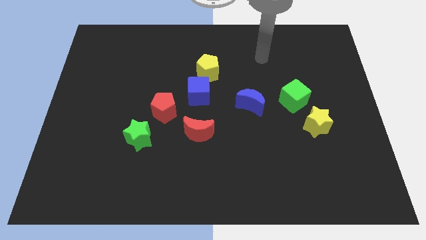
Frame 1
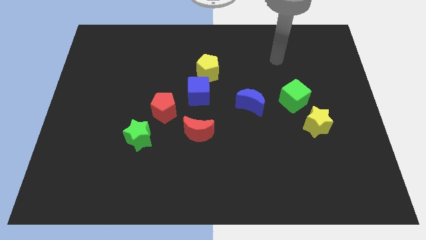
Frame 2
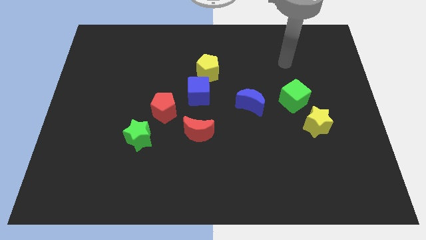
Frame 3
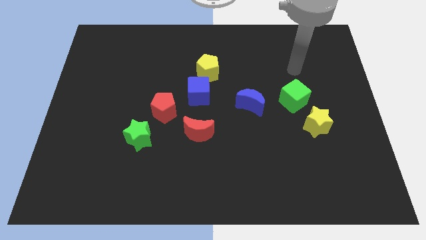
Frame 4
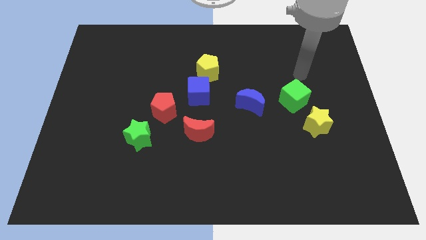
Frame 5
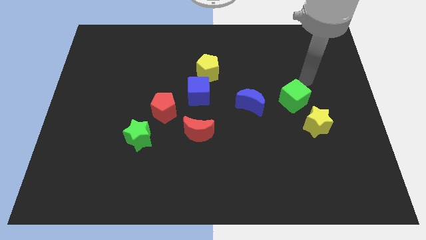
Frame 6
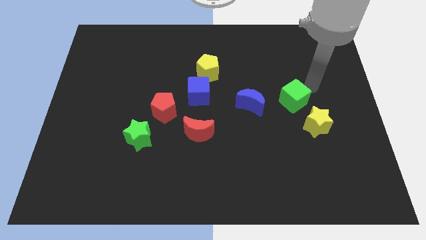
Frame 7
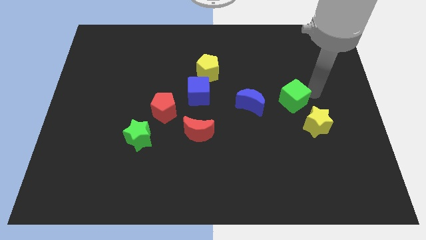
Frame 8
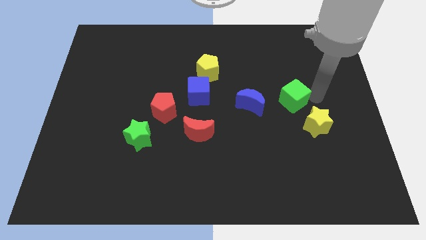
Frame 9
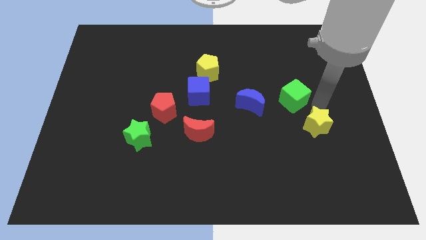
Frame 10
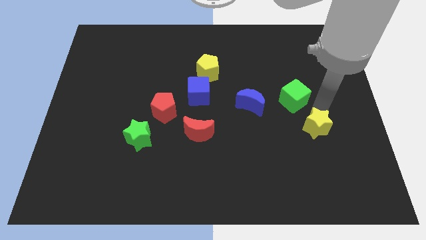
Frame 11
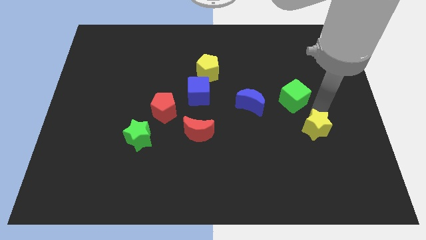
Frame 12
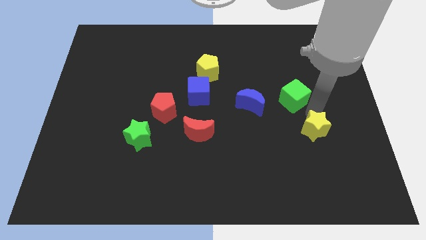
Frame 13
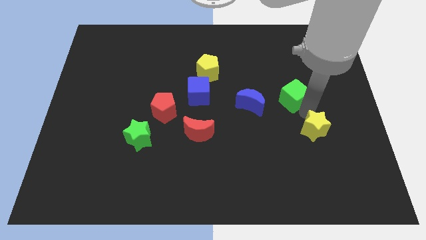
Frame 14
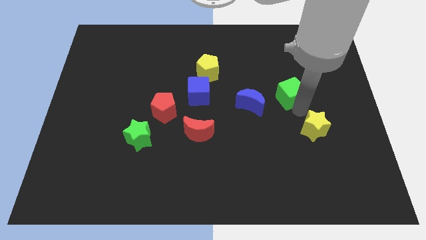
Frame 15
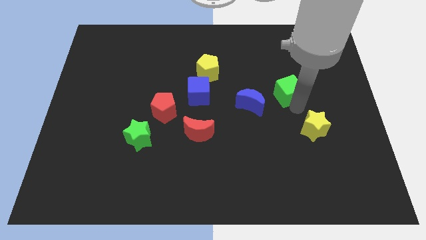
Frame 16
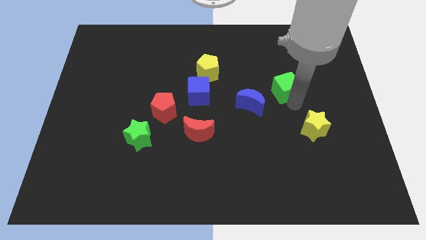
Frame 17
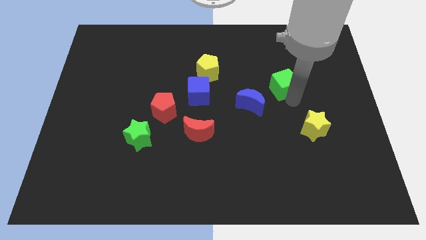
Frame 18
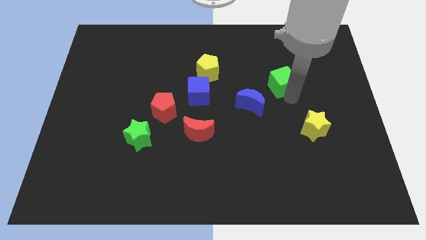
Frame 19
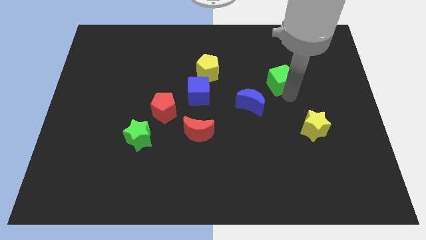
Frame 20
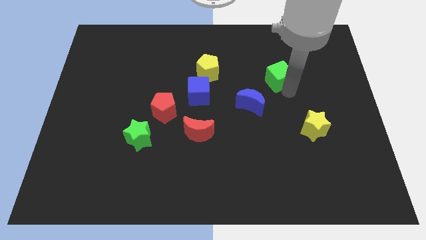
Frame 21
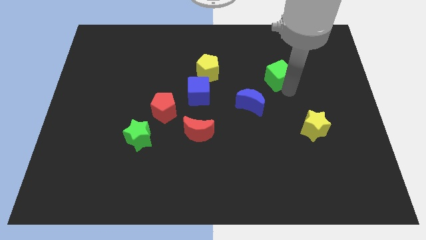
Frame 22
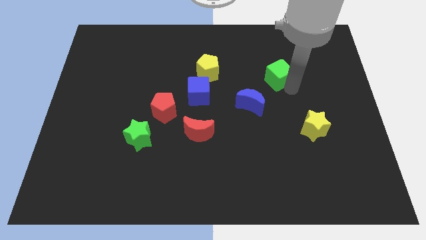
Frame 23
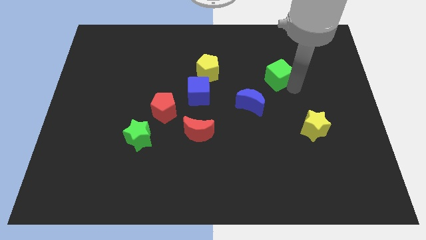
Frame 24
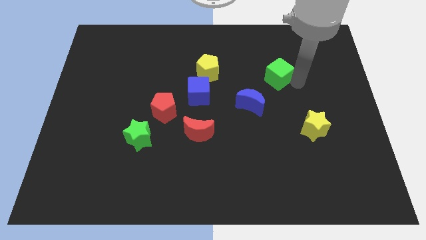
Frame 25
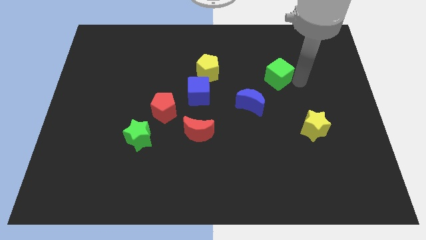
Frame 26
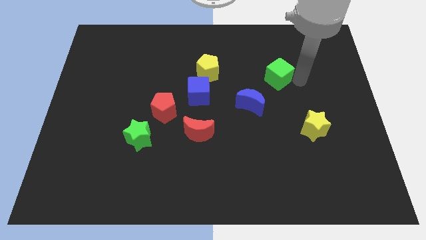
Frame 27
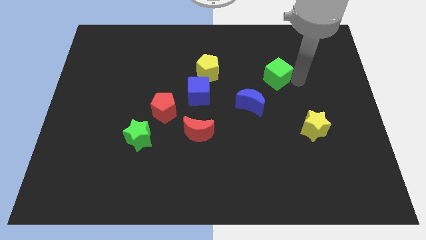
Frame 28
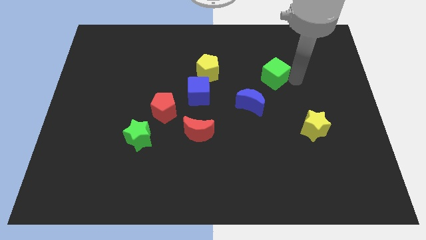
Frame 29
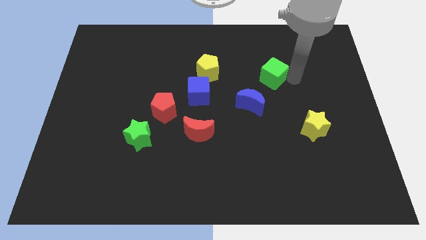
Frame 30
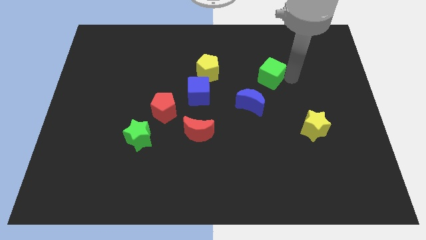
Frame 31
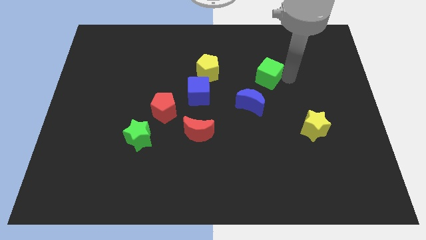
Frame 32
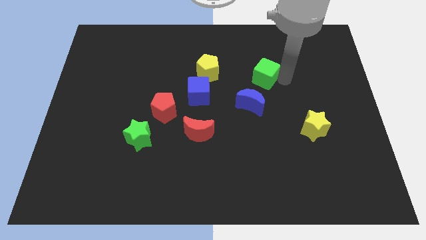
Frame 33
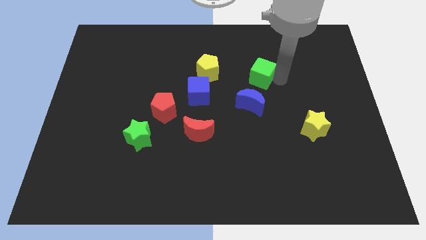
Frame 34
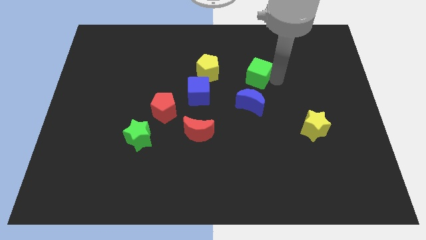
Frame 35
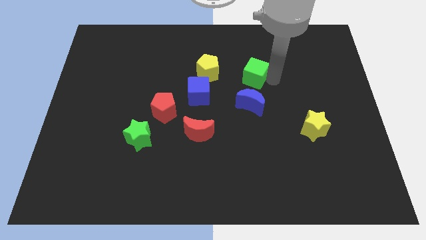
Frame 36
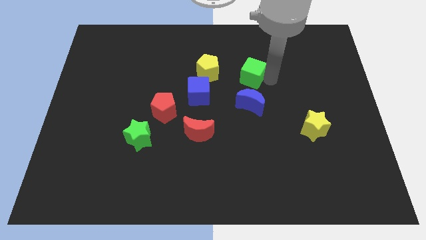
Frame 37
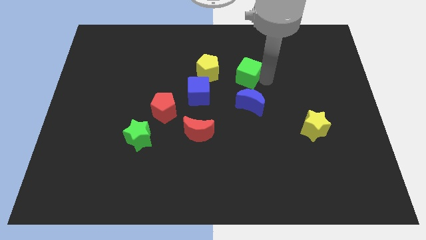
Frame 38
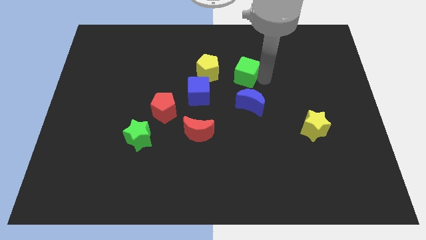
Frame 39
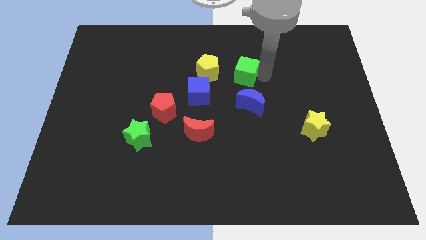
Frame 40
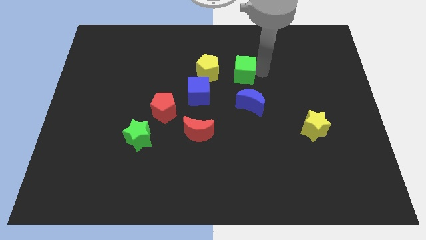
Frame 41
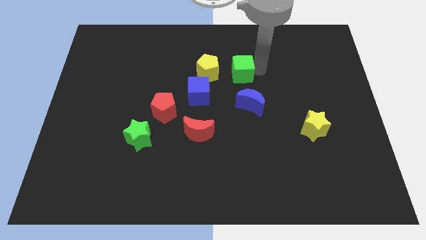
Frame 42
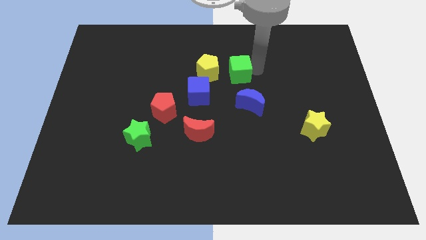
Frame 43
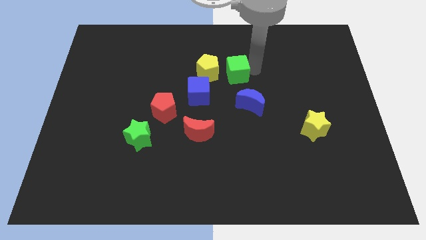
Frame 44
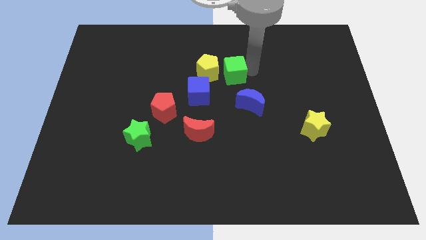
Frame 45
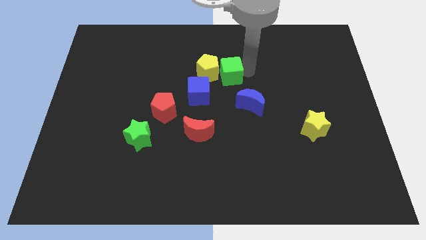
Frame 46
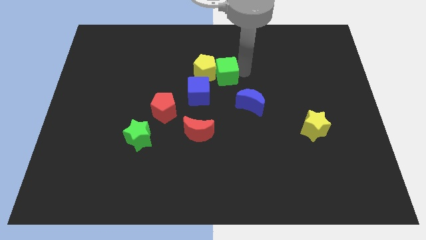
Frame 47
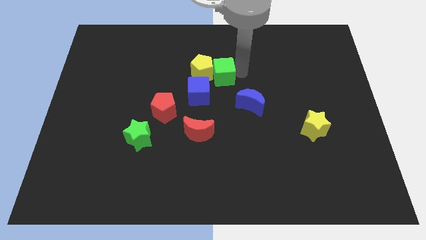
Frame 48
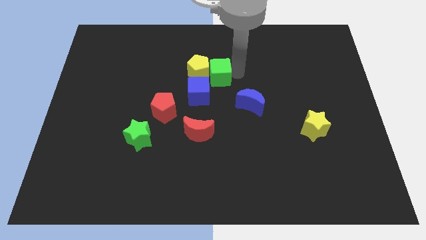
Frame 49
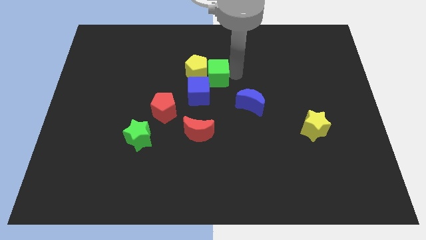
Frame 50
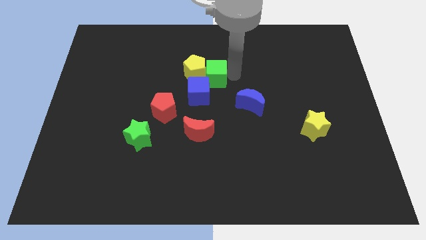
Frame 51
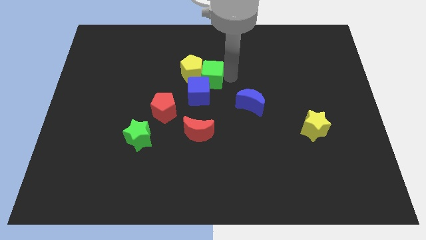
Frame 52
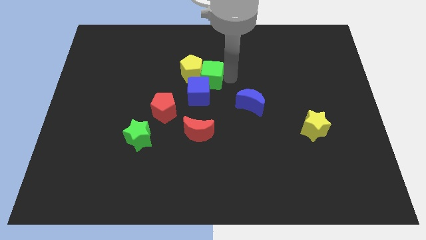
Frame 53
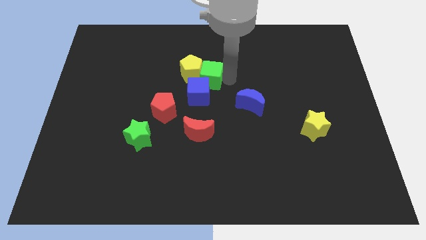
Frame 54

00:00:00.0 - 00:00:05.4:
slide the green cube next to the blue cube

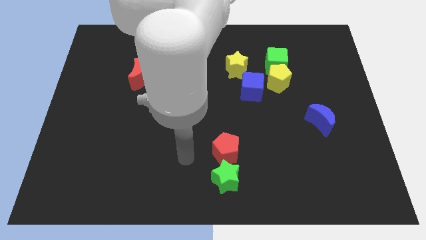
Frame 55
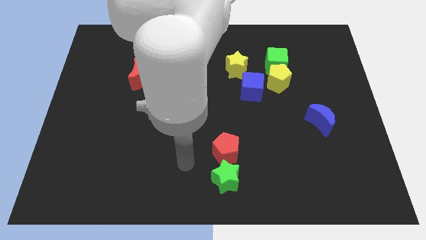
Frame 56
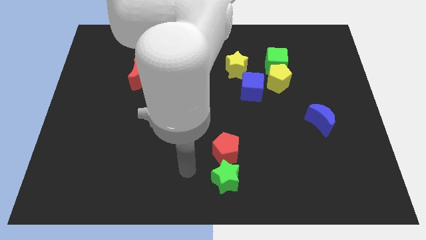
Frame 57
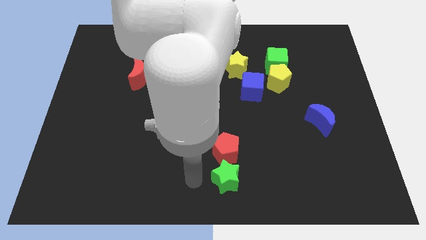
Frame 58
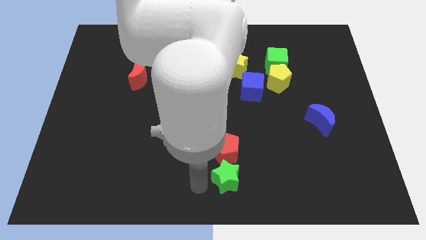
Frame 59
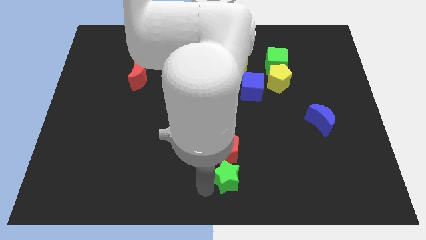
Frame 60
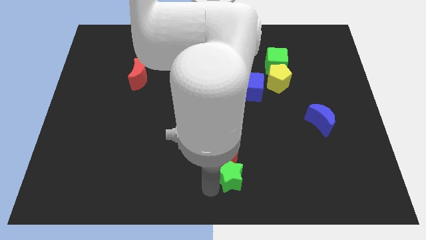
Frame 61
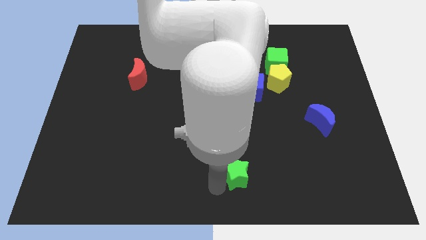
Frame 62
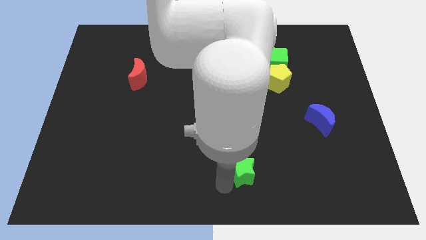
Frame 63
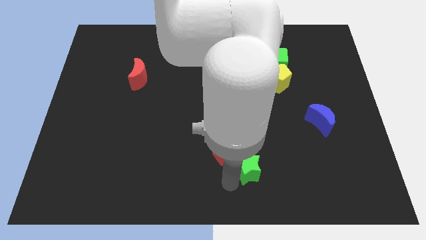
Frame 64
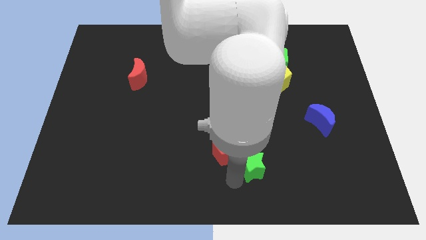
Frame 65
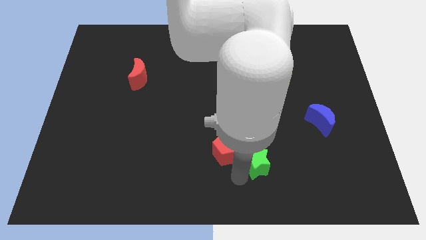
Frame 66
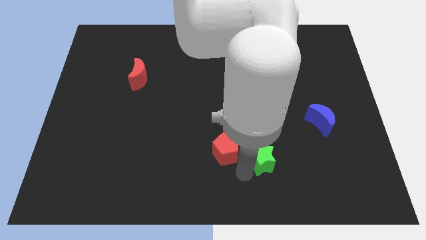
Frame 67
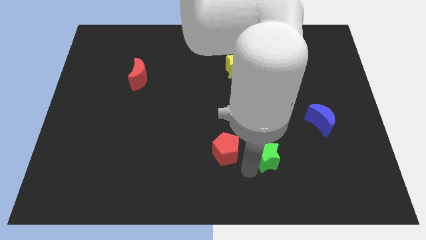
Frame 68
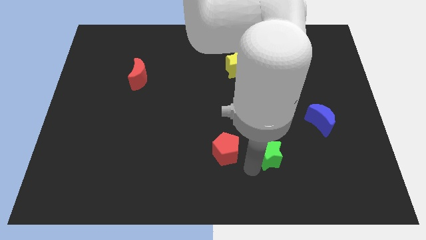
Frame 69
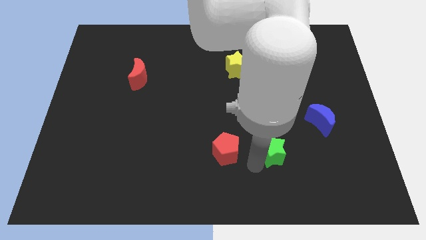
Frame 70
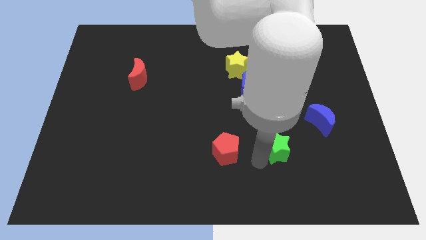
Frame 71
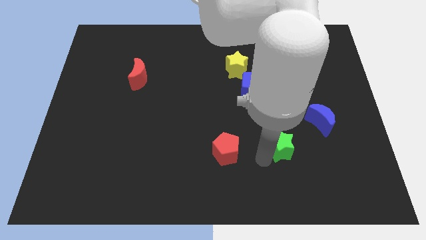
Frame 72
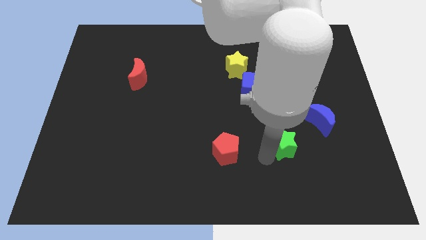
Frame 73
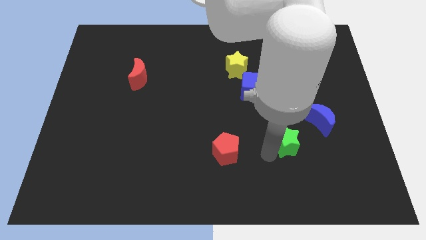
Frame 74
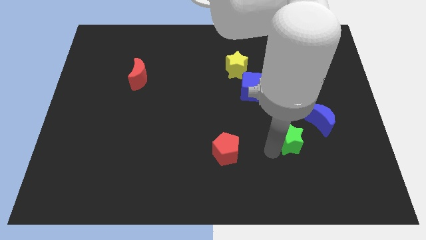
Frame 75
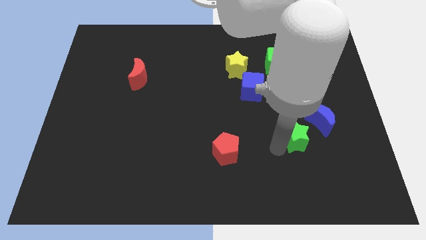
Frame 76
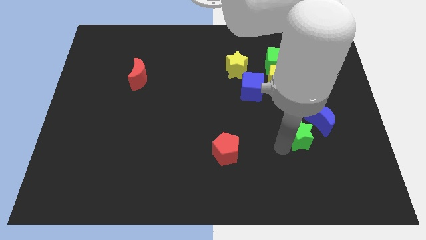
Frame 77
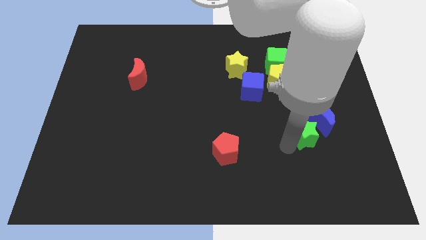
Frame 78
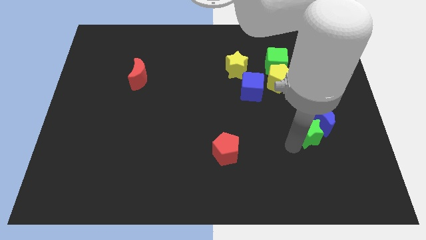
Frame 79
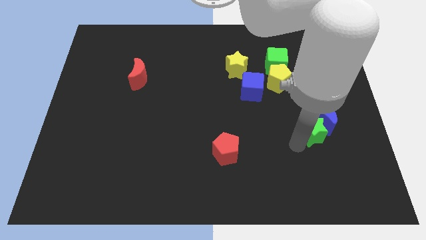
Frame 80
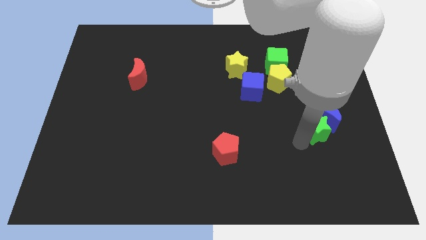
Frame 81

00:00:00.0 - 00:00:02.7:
put the green star towards the blue moon

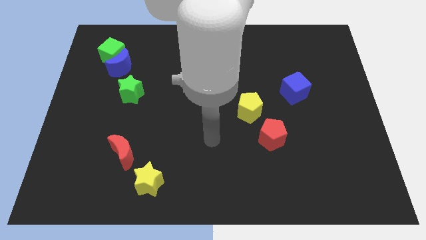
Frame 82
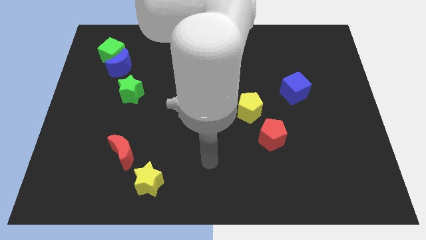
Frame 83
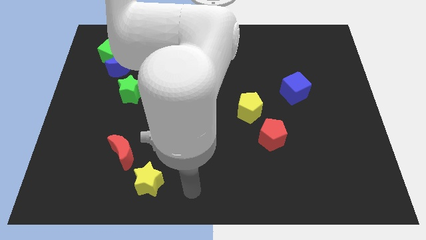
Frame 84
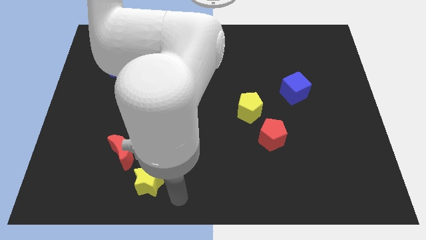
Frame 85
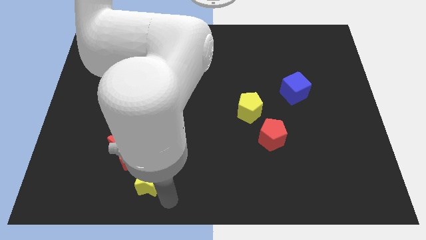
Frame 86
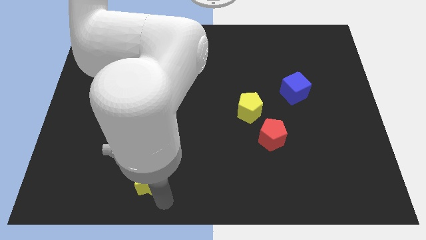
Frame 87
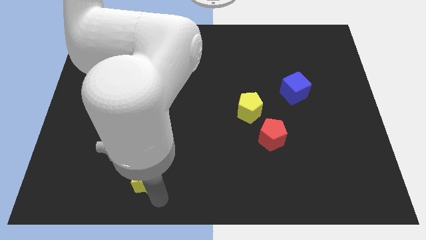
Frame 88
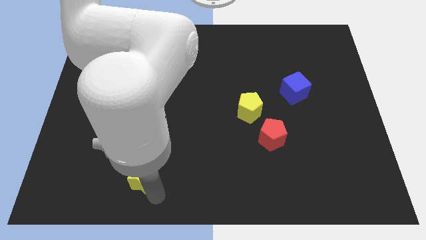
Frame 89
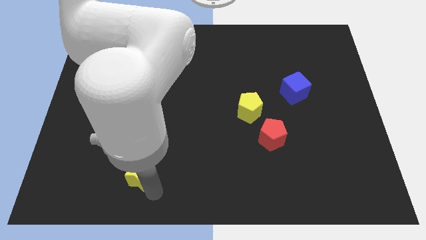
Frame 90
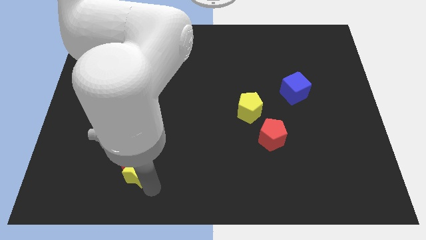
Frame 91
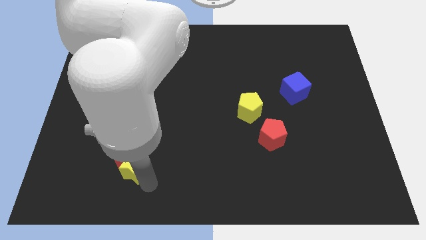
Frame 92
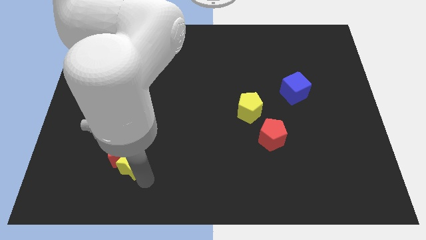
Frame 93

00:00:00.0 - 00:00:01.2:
slide the yellow star next to the red moon
